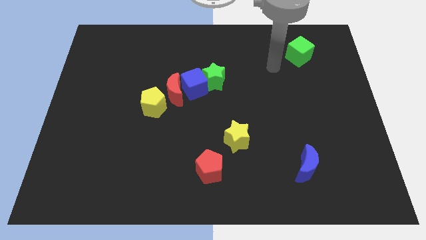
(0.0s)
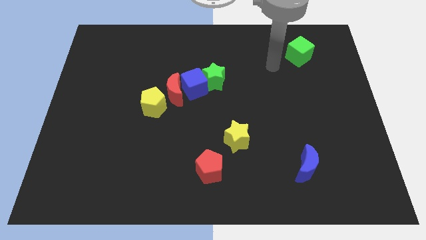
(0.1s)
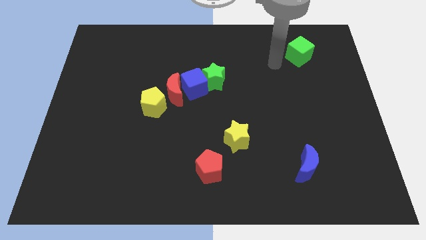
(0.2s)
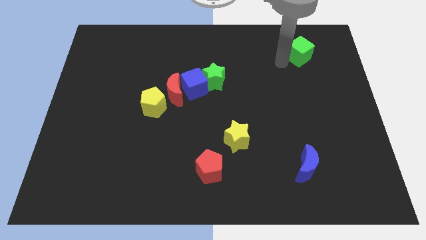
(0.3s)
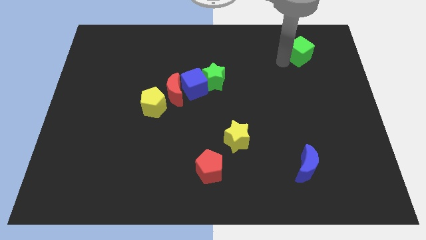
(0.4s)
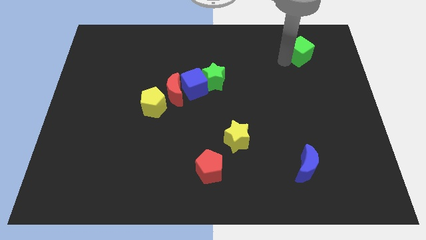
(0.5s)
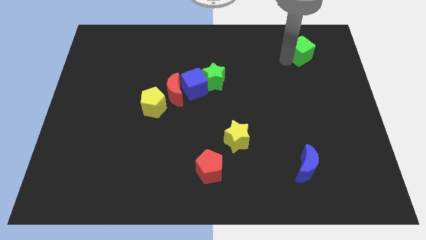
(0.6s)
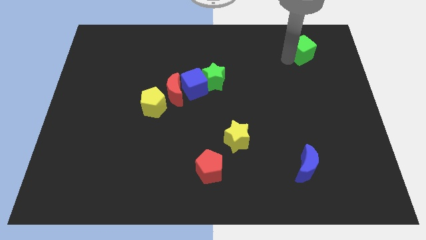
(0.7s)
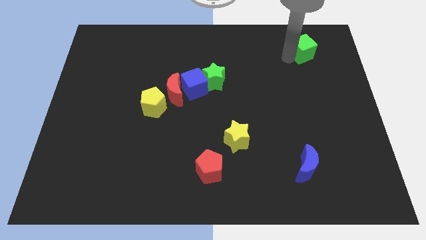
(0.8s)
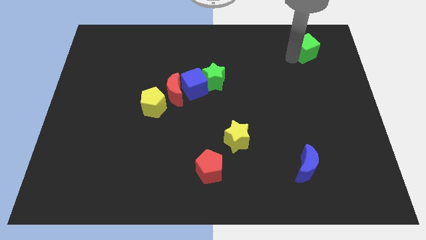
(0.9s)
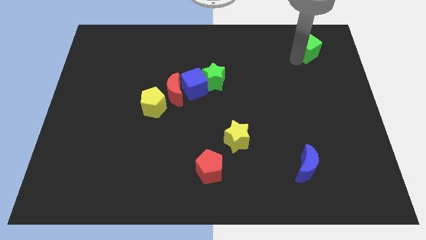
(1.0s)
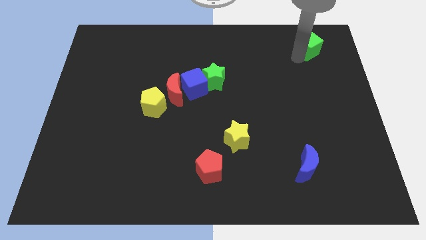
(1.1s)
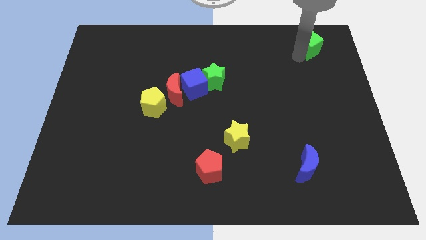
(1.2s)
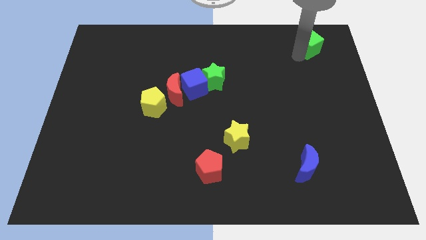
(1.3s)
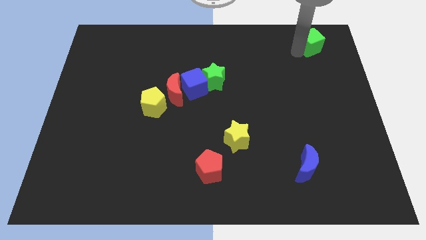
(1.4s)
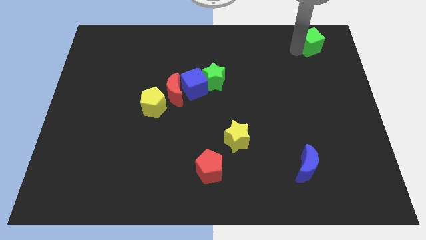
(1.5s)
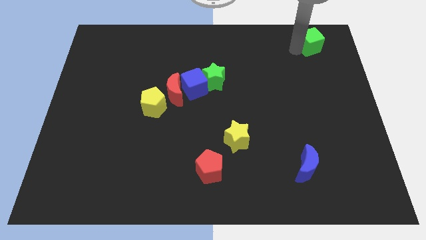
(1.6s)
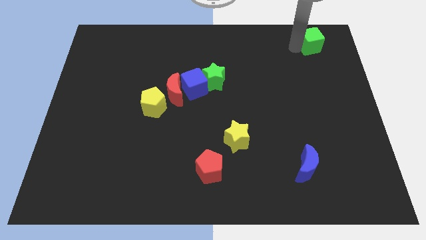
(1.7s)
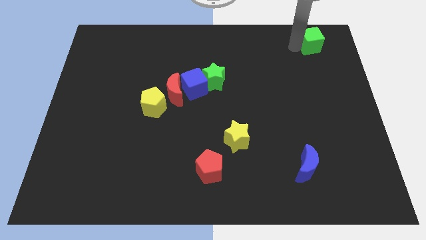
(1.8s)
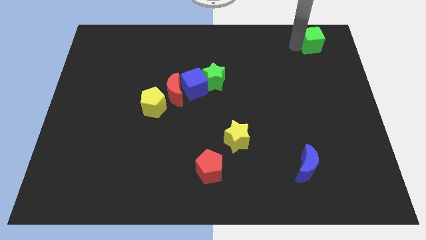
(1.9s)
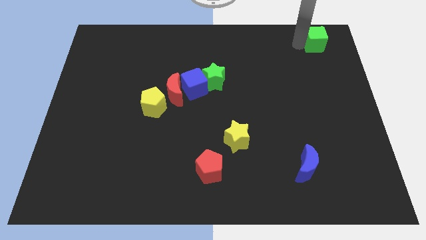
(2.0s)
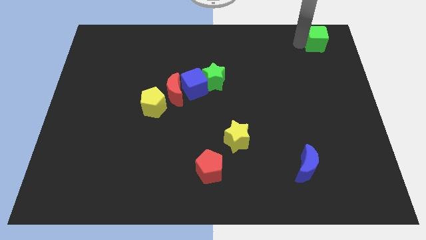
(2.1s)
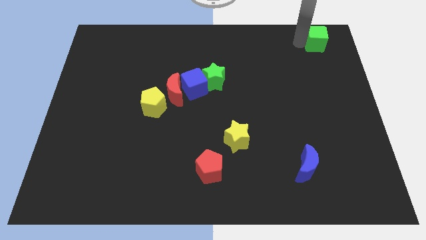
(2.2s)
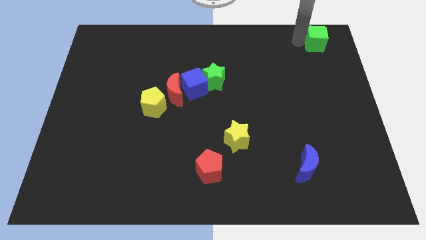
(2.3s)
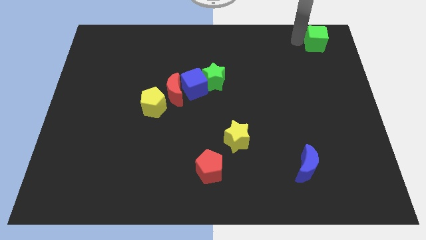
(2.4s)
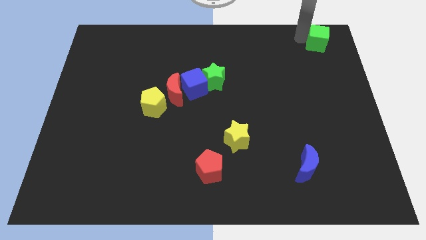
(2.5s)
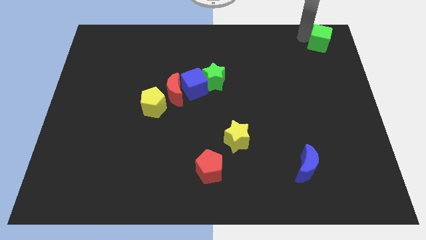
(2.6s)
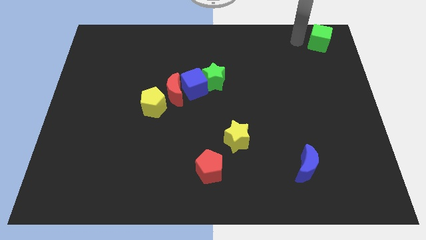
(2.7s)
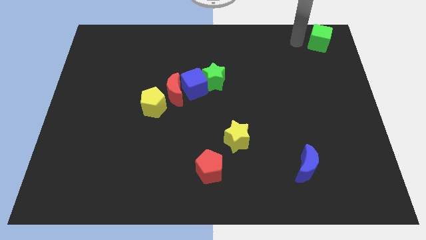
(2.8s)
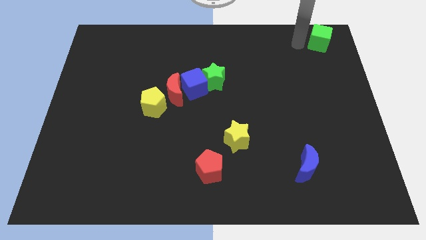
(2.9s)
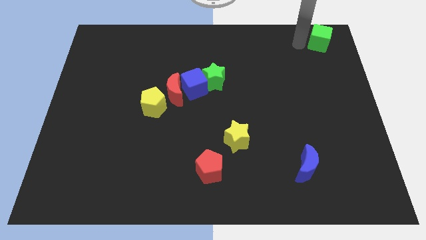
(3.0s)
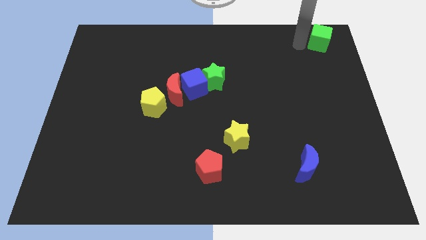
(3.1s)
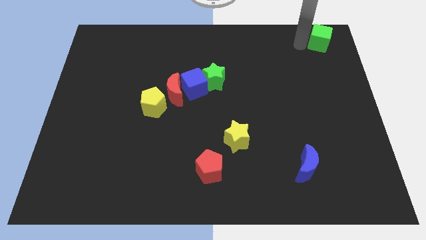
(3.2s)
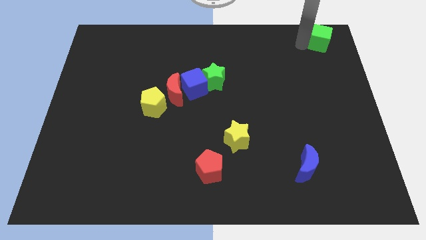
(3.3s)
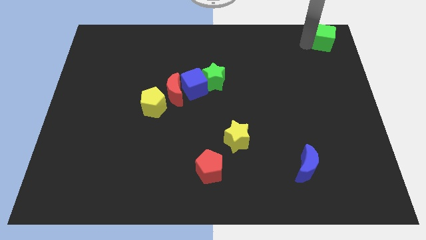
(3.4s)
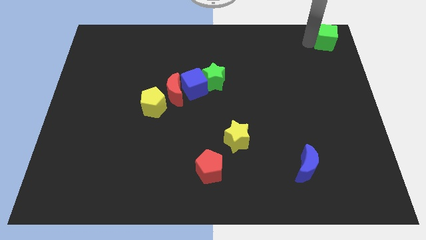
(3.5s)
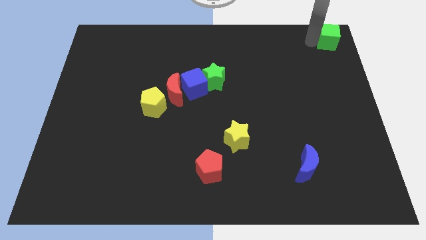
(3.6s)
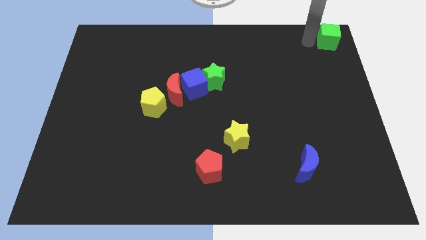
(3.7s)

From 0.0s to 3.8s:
place the green cube to the top right corner side

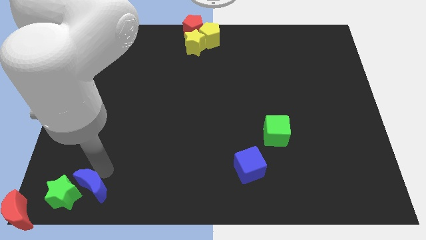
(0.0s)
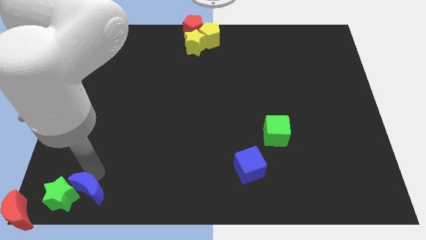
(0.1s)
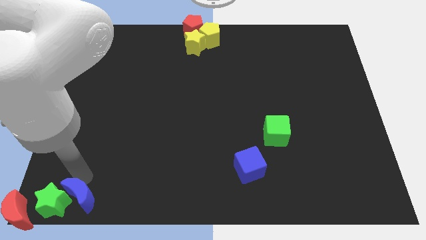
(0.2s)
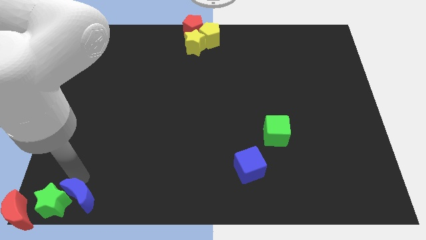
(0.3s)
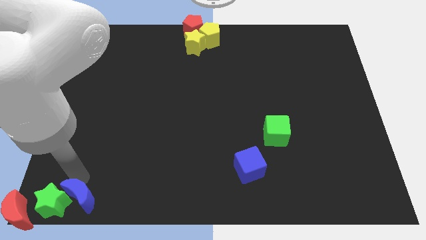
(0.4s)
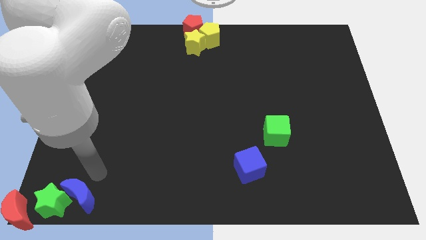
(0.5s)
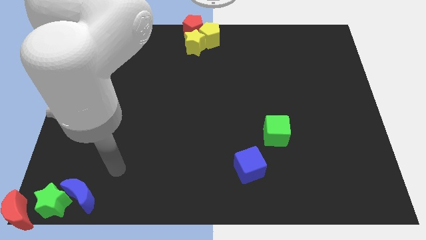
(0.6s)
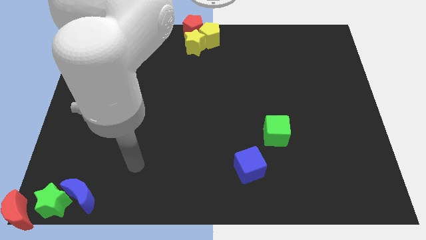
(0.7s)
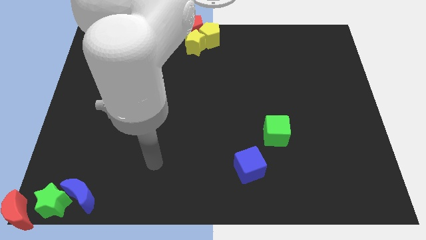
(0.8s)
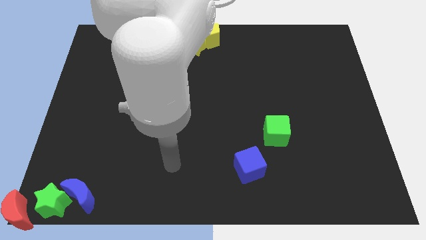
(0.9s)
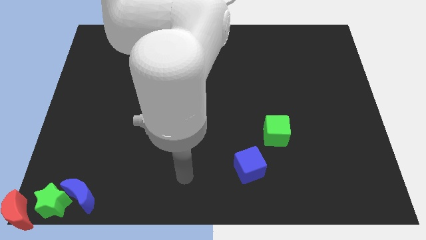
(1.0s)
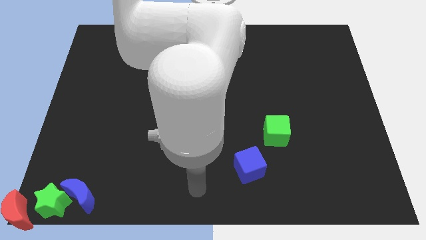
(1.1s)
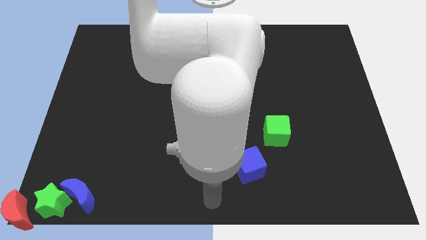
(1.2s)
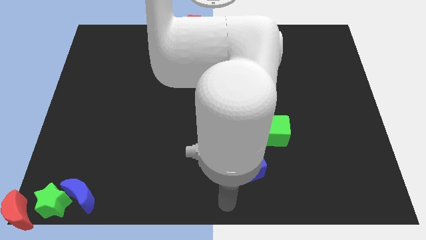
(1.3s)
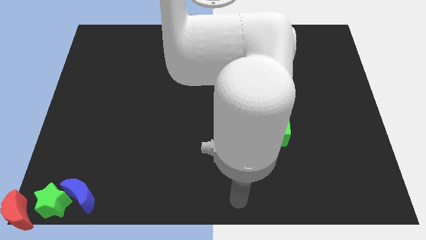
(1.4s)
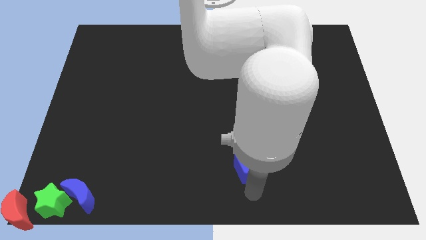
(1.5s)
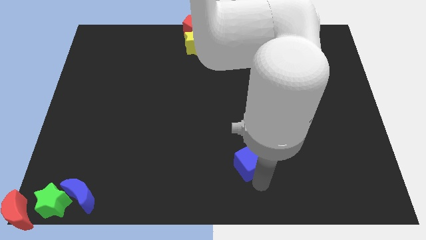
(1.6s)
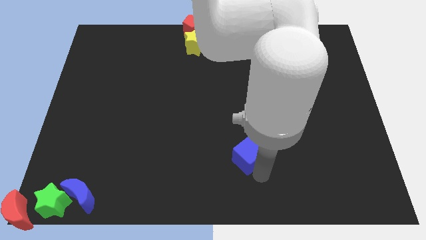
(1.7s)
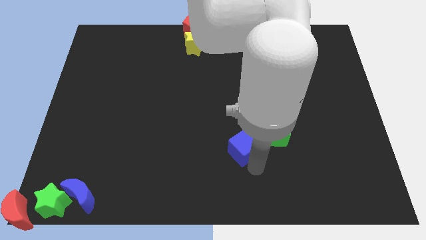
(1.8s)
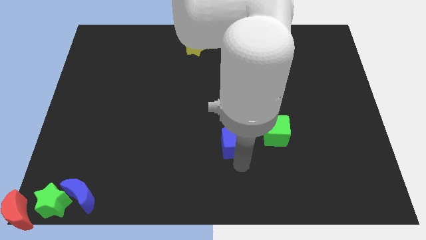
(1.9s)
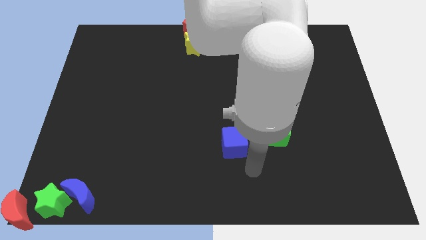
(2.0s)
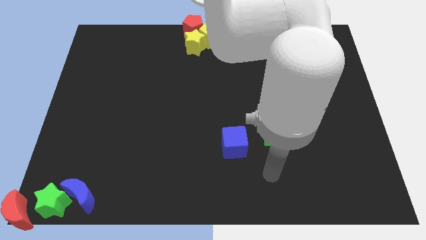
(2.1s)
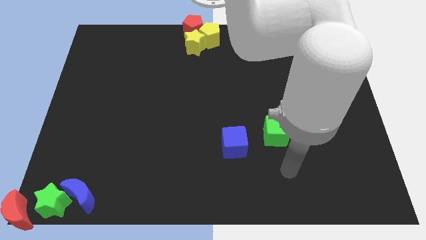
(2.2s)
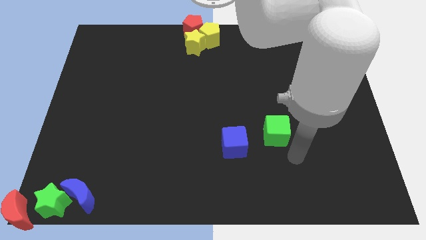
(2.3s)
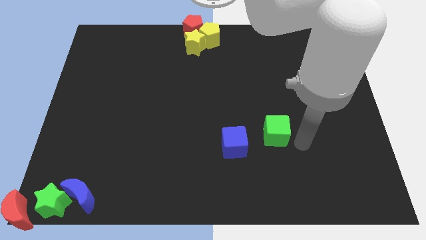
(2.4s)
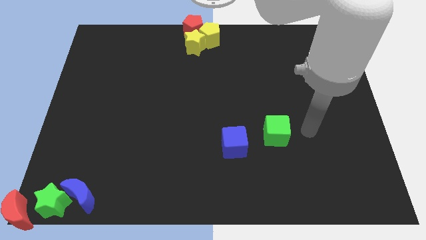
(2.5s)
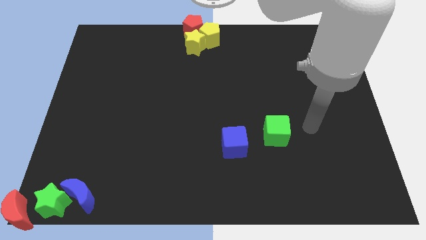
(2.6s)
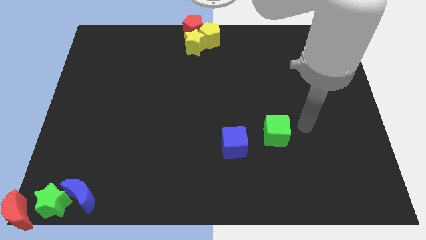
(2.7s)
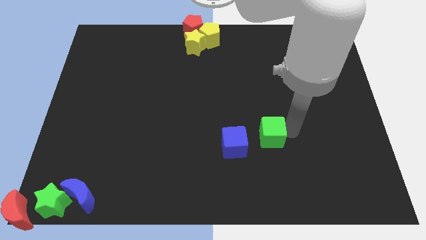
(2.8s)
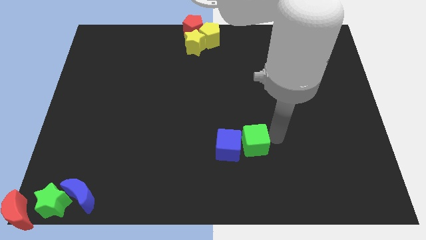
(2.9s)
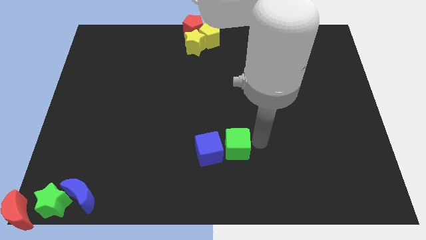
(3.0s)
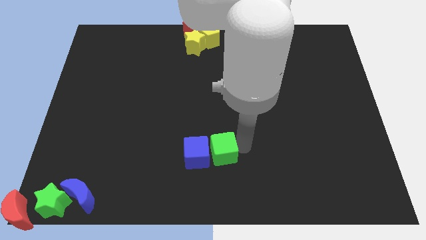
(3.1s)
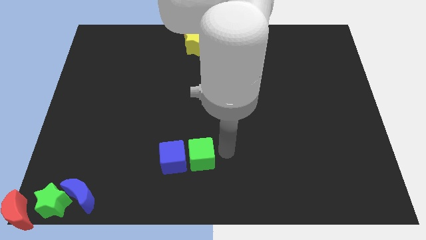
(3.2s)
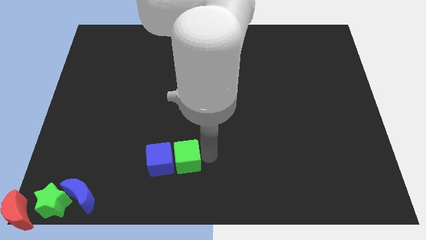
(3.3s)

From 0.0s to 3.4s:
push green cube and the blue cube towards bottom left

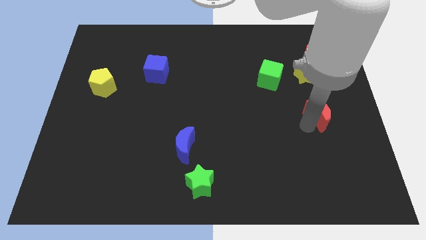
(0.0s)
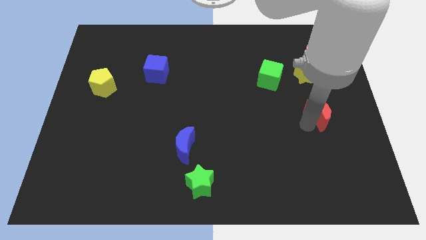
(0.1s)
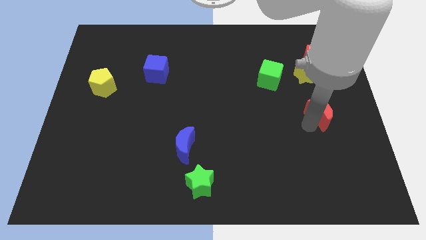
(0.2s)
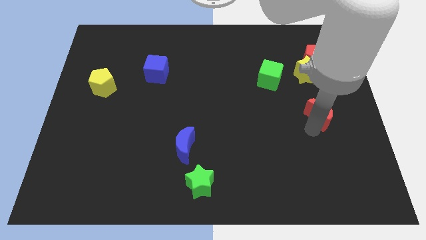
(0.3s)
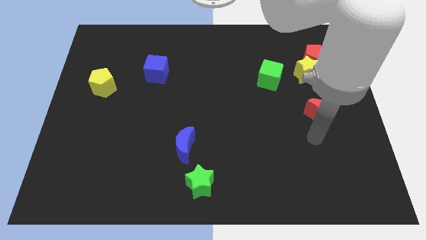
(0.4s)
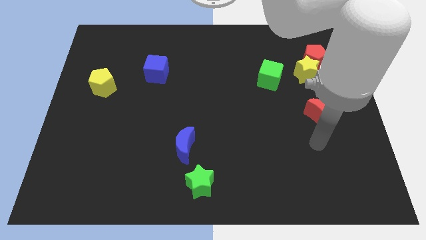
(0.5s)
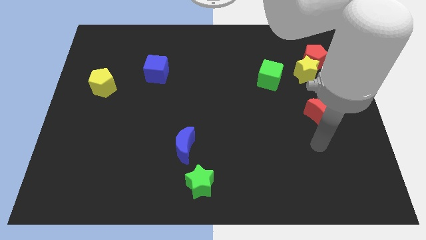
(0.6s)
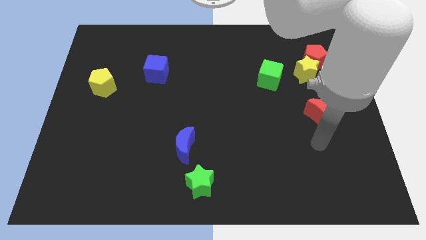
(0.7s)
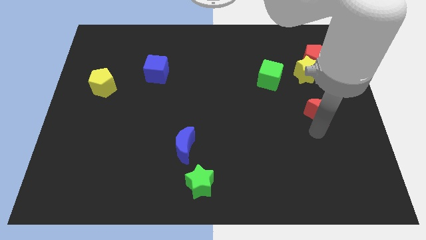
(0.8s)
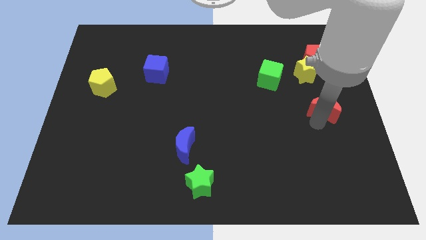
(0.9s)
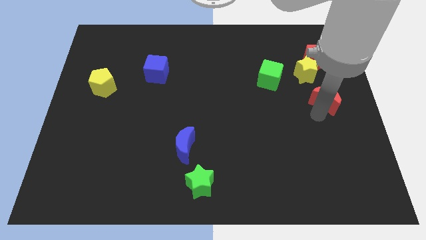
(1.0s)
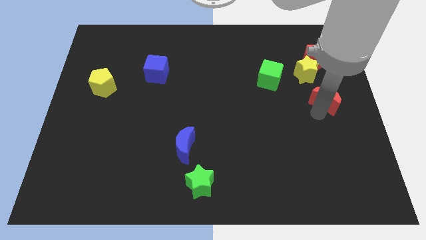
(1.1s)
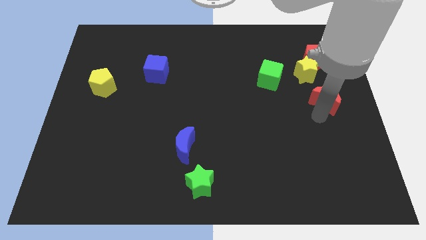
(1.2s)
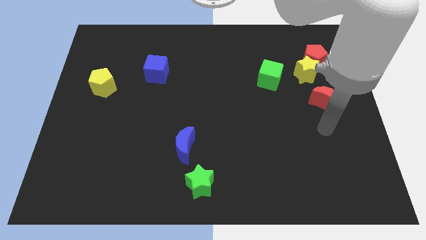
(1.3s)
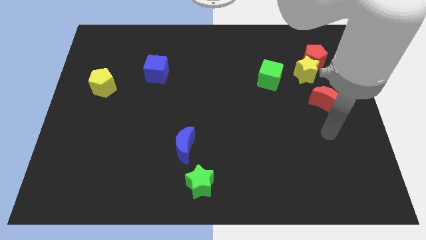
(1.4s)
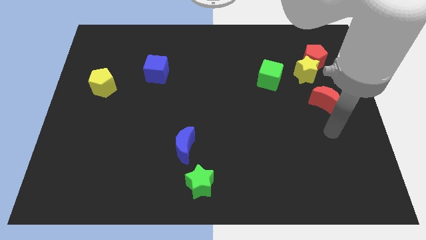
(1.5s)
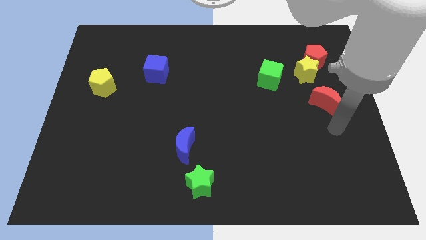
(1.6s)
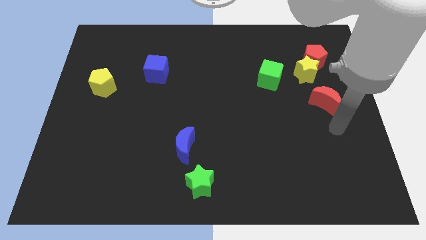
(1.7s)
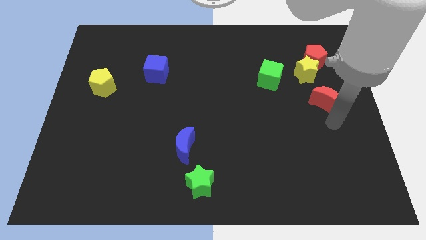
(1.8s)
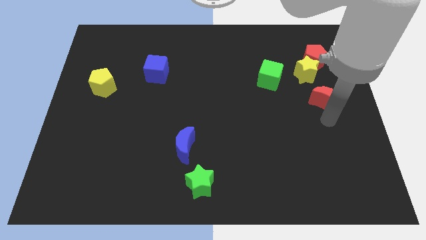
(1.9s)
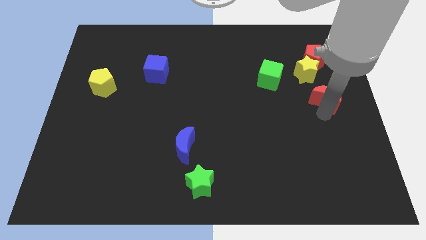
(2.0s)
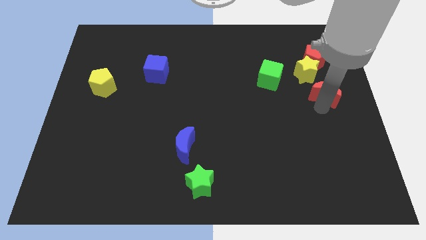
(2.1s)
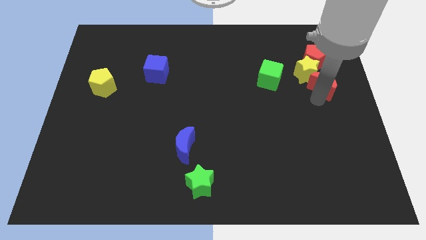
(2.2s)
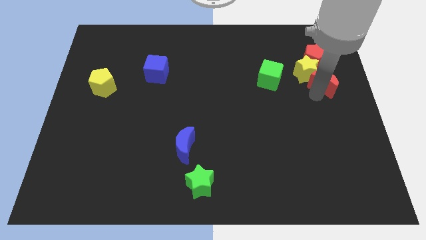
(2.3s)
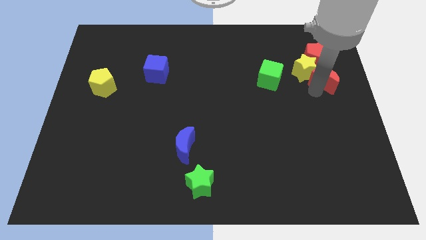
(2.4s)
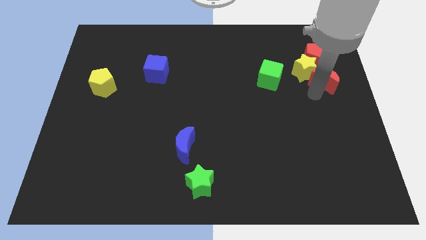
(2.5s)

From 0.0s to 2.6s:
move the red crescent to the bottom right of the yellow star
